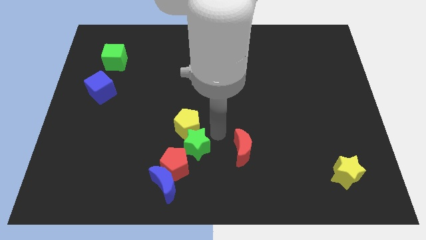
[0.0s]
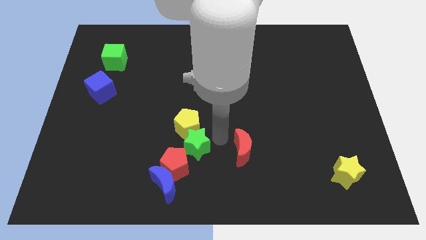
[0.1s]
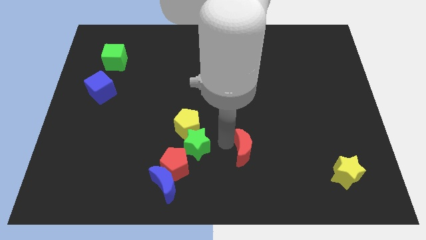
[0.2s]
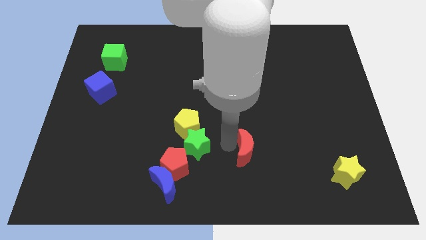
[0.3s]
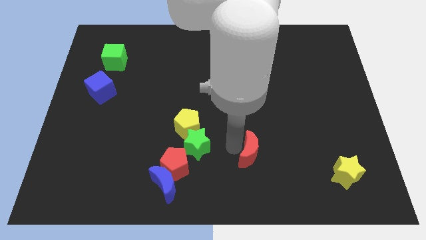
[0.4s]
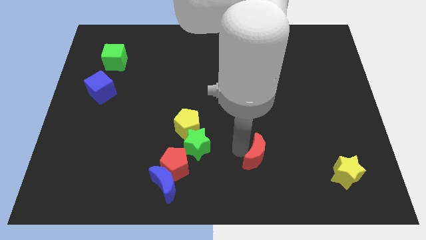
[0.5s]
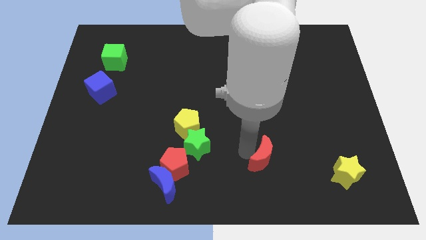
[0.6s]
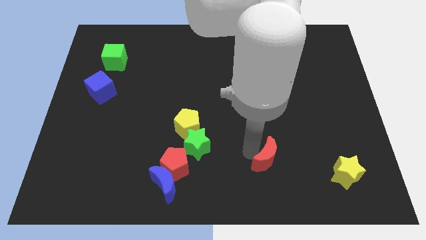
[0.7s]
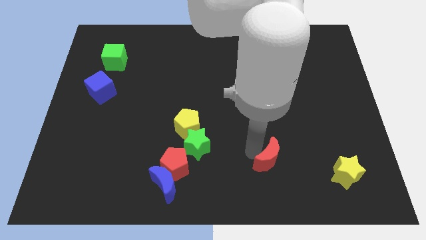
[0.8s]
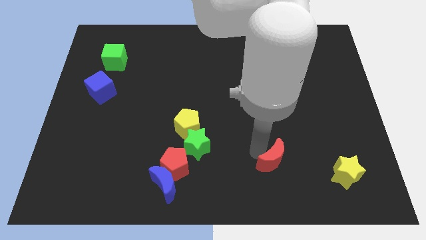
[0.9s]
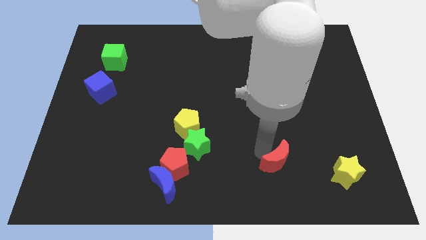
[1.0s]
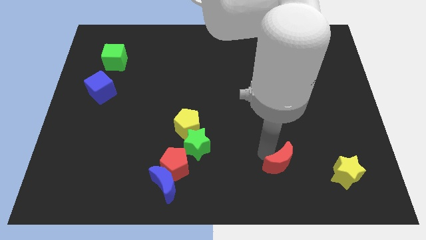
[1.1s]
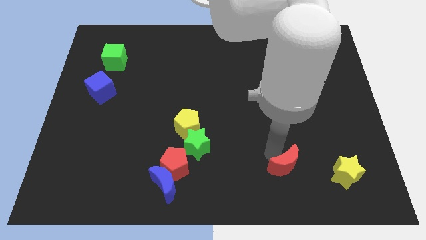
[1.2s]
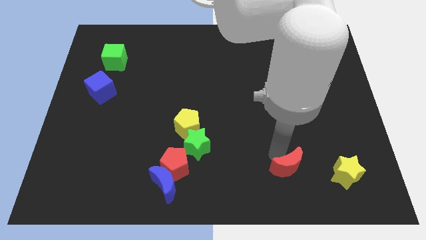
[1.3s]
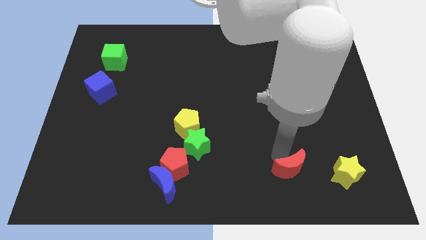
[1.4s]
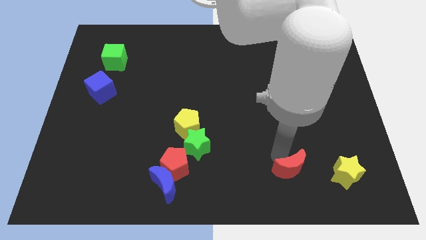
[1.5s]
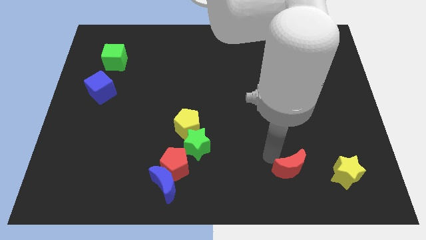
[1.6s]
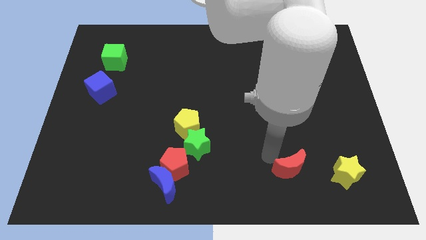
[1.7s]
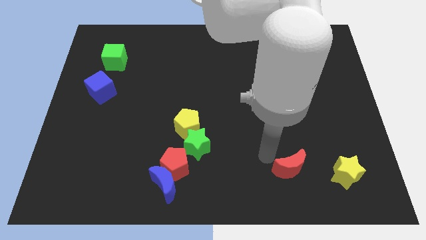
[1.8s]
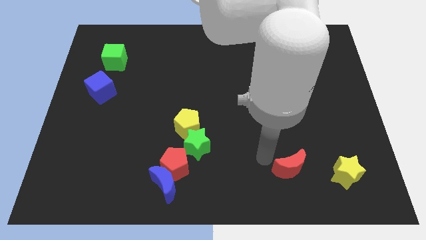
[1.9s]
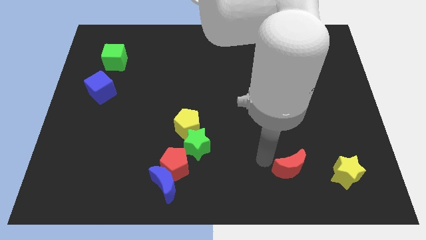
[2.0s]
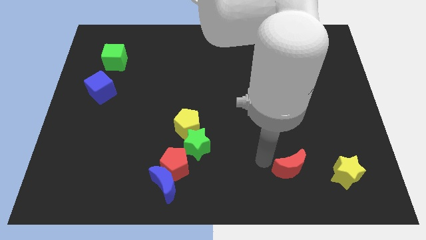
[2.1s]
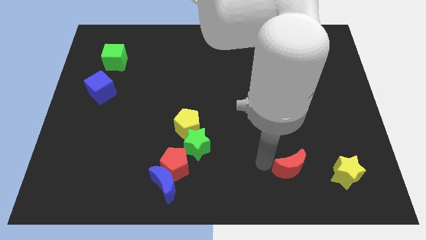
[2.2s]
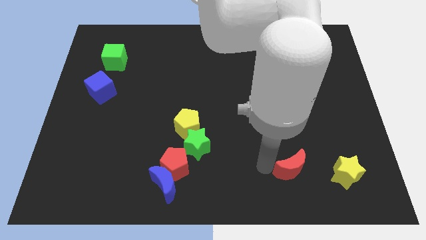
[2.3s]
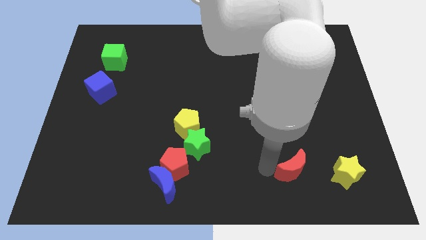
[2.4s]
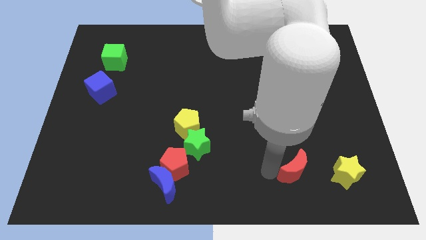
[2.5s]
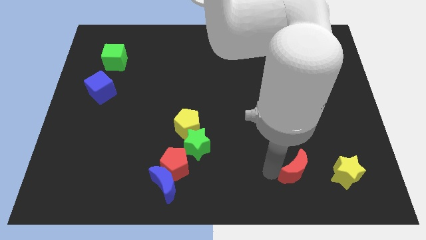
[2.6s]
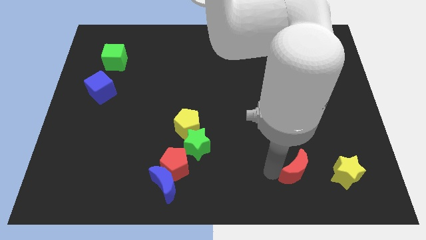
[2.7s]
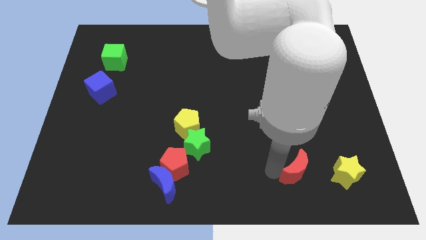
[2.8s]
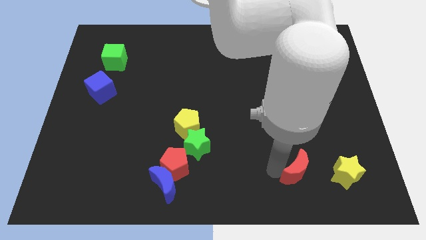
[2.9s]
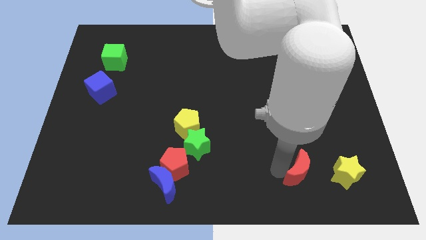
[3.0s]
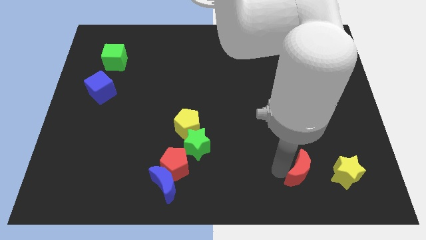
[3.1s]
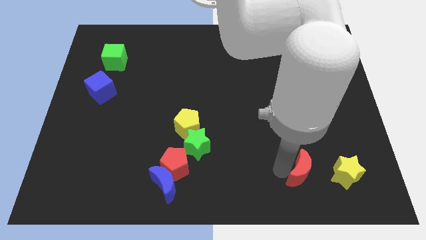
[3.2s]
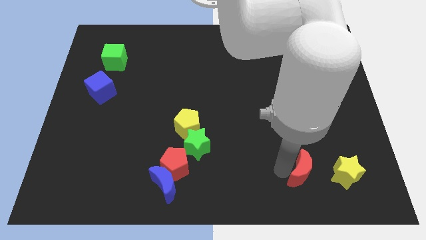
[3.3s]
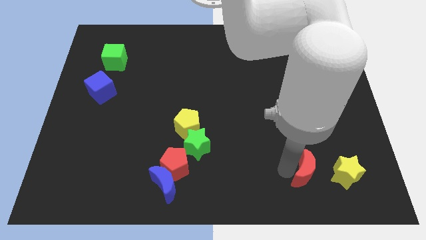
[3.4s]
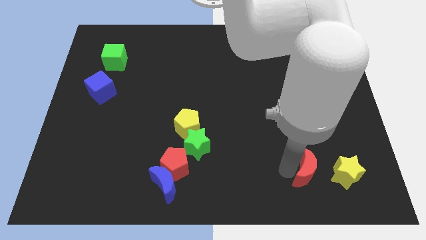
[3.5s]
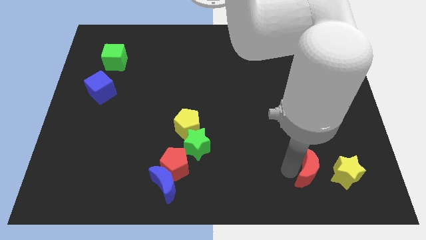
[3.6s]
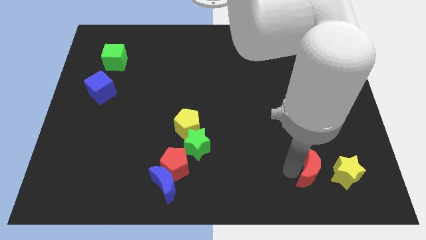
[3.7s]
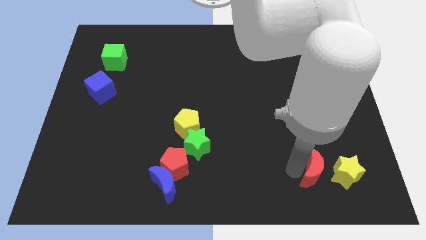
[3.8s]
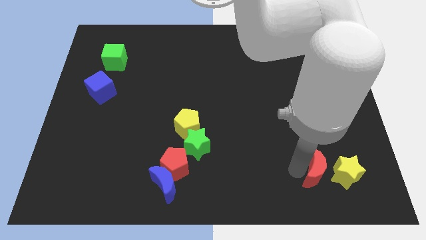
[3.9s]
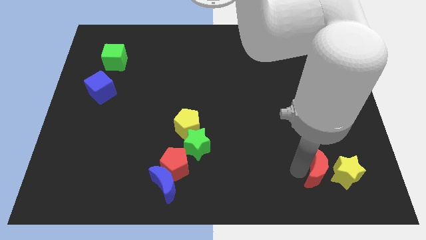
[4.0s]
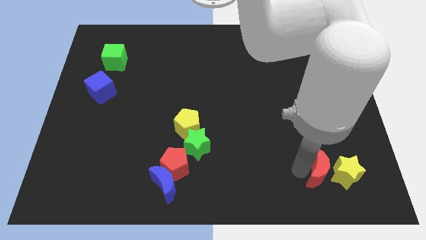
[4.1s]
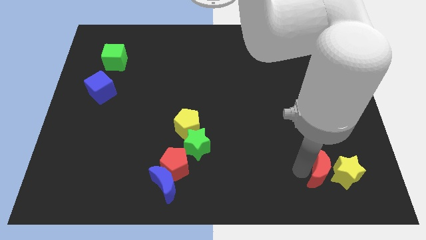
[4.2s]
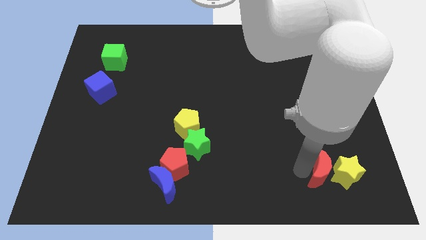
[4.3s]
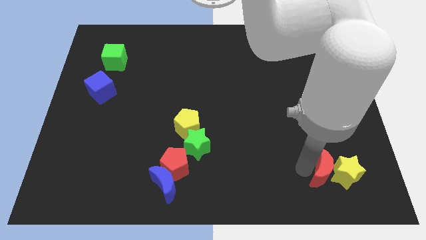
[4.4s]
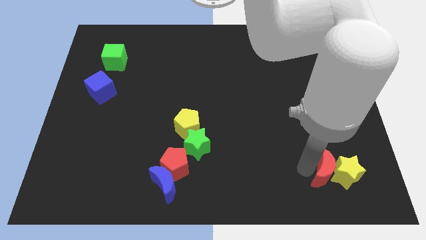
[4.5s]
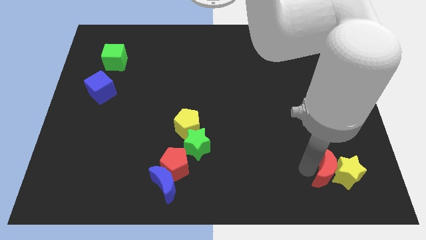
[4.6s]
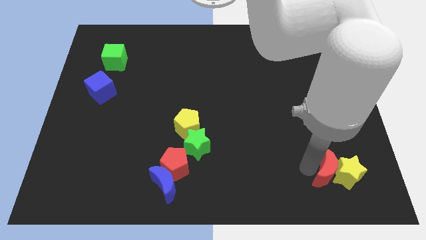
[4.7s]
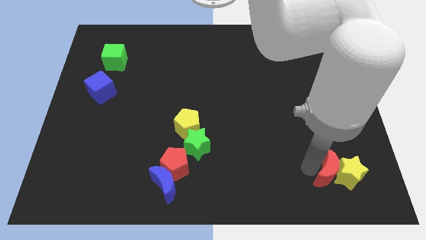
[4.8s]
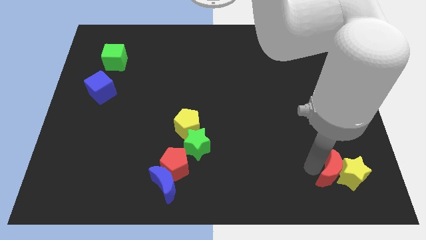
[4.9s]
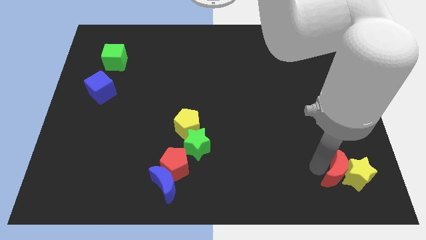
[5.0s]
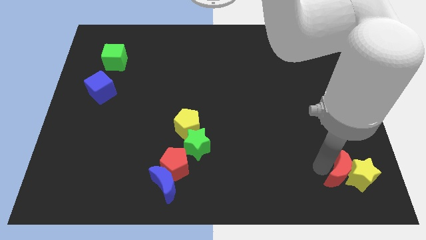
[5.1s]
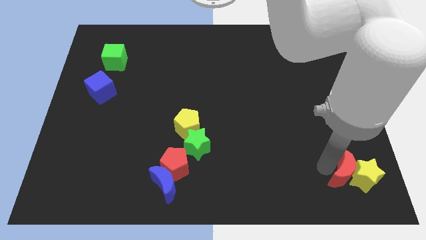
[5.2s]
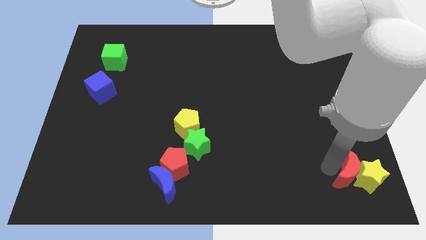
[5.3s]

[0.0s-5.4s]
move red moon into the yellow star

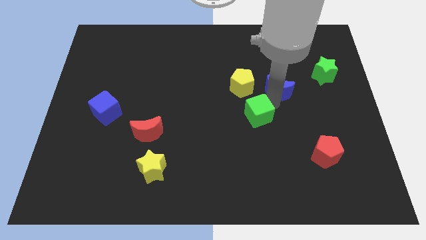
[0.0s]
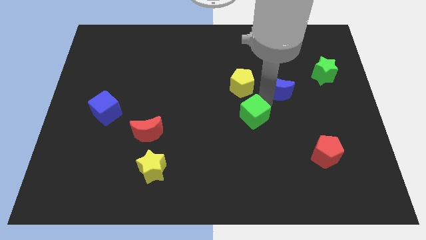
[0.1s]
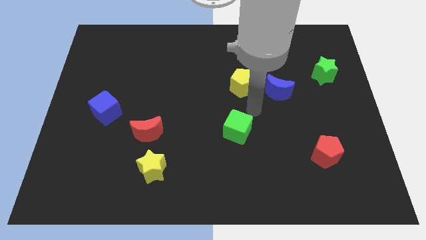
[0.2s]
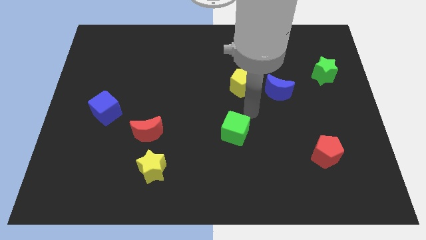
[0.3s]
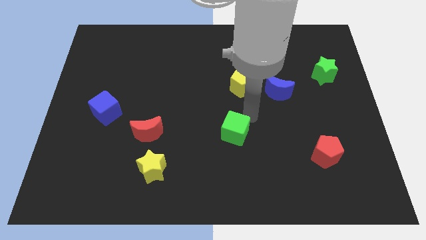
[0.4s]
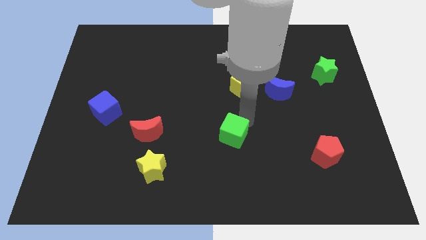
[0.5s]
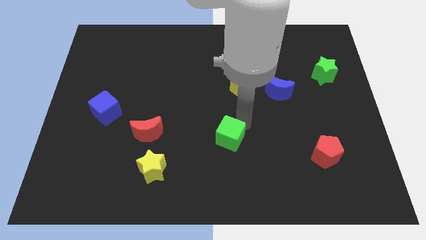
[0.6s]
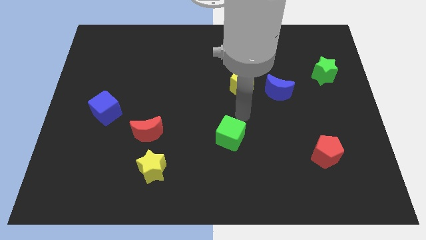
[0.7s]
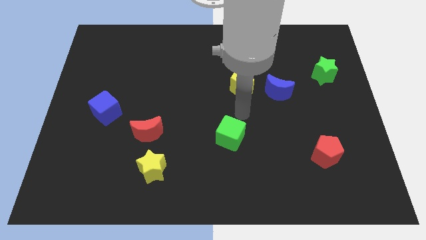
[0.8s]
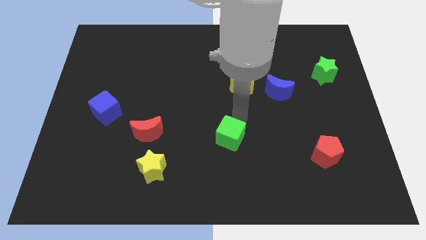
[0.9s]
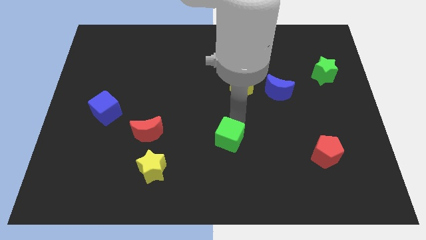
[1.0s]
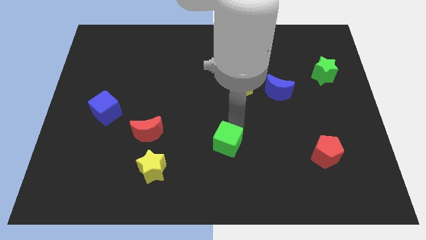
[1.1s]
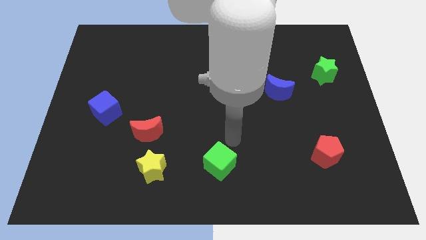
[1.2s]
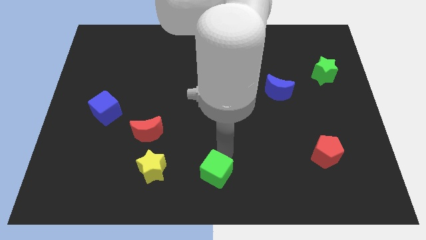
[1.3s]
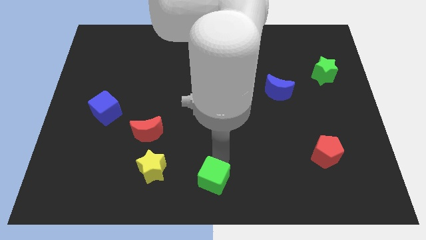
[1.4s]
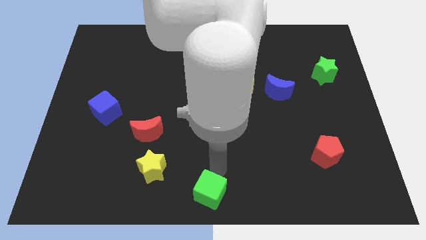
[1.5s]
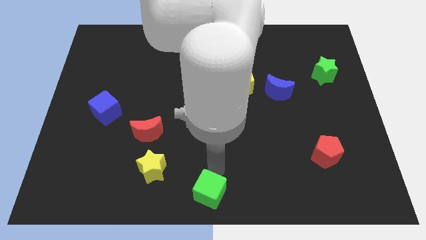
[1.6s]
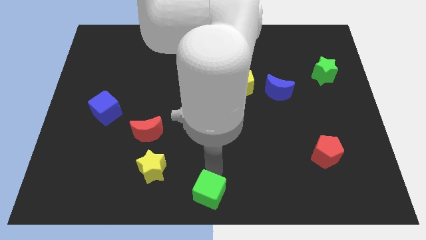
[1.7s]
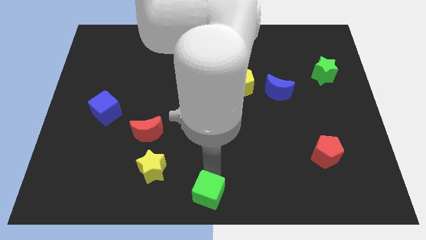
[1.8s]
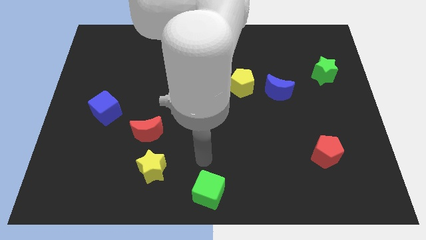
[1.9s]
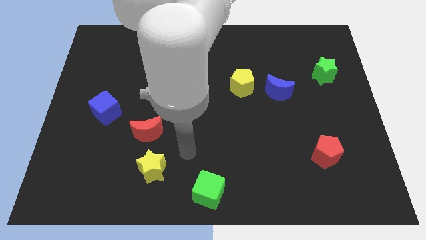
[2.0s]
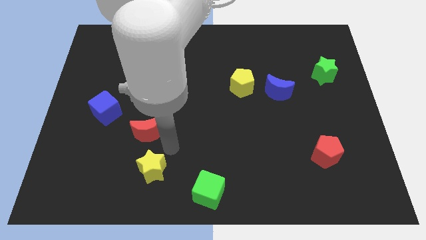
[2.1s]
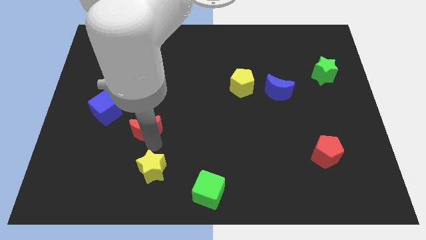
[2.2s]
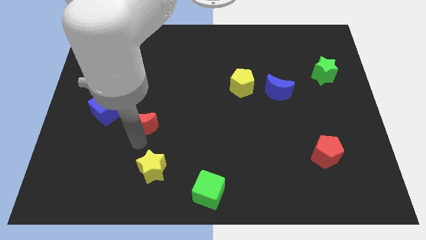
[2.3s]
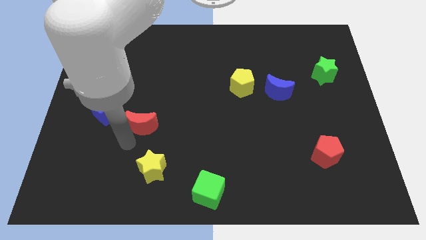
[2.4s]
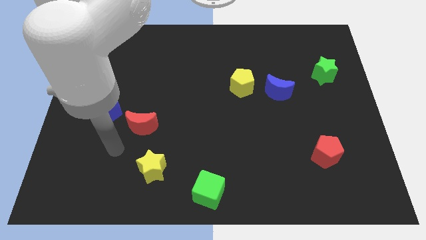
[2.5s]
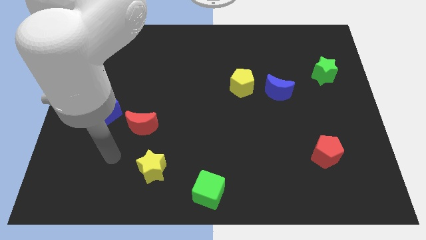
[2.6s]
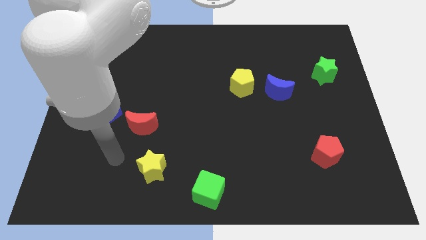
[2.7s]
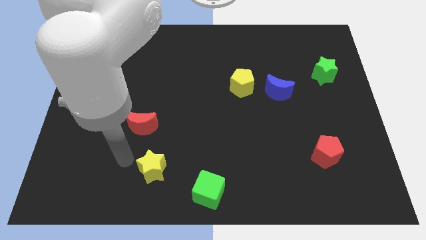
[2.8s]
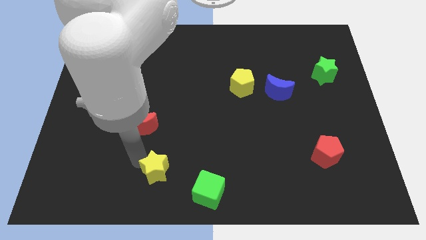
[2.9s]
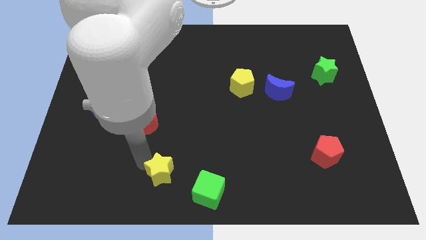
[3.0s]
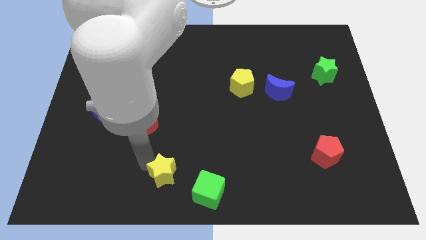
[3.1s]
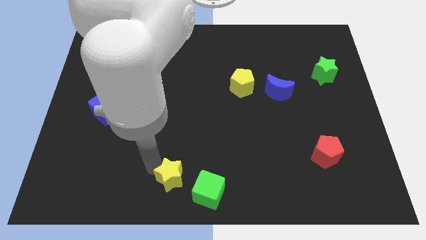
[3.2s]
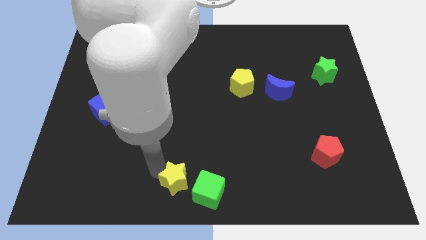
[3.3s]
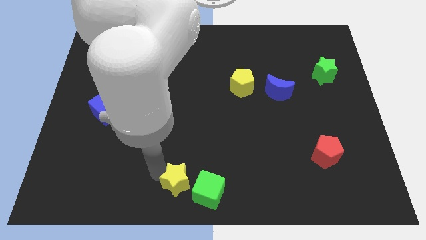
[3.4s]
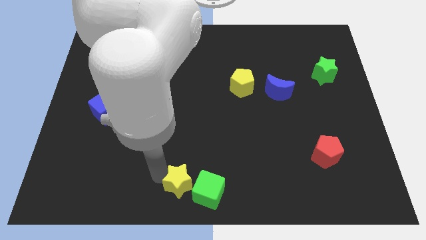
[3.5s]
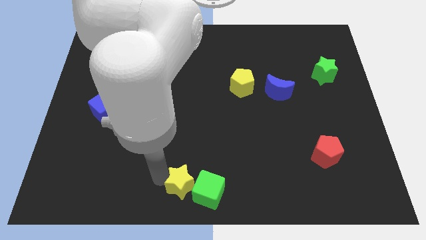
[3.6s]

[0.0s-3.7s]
place the yellow star to the left of the green cube
